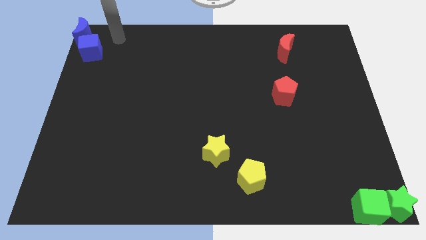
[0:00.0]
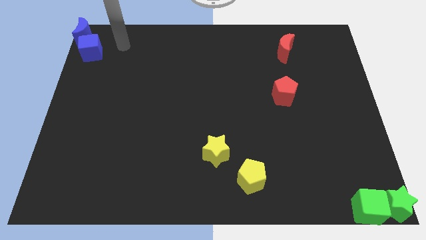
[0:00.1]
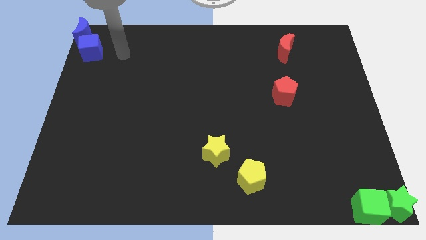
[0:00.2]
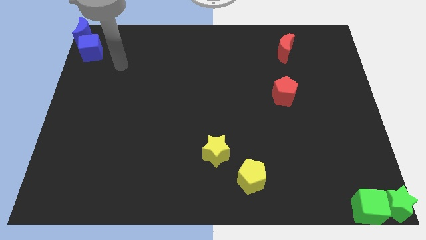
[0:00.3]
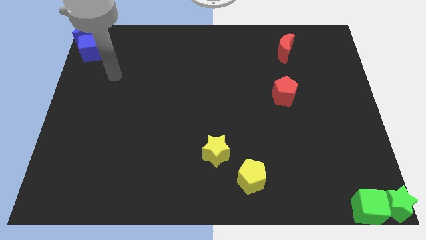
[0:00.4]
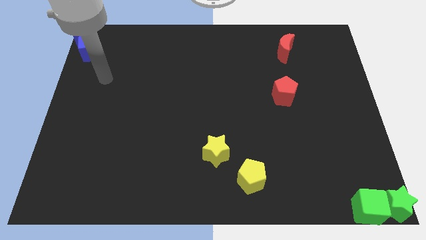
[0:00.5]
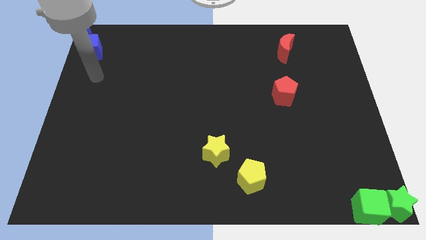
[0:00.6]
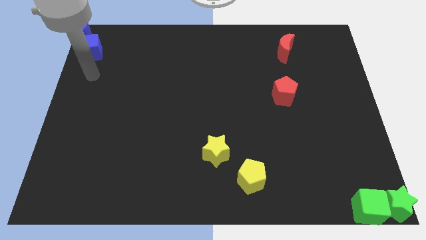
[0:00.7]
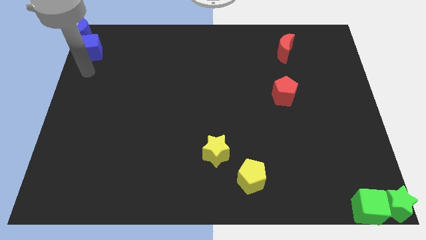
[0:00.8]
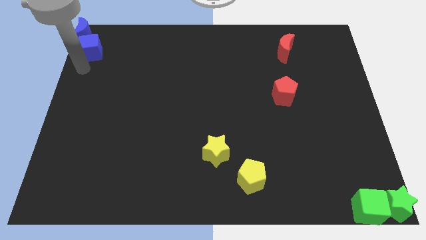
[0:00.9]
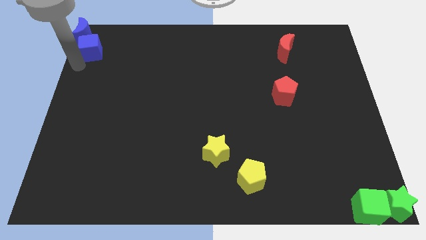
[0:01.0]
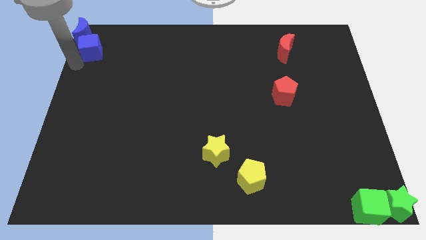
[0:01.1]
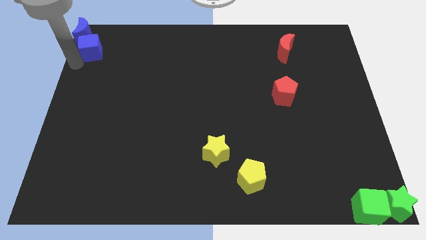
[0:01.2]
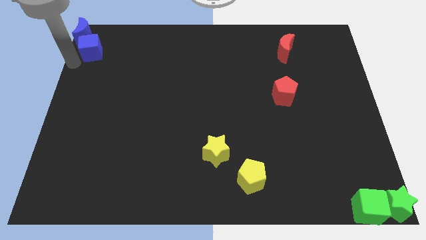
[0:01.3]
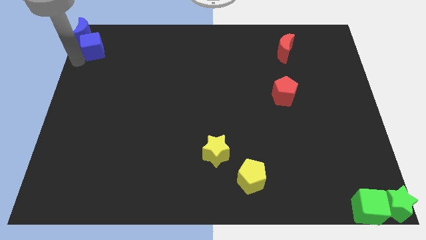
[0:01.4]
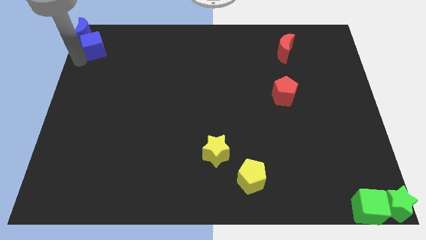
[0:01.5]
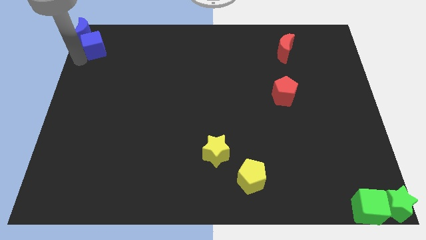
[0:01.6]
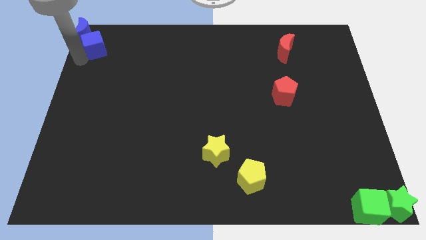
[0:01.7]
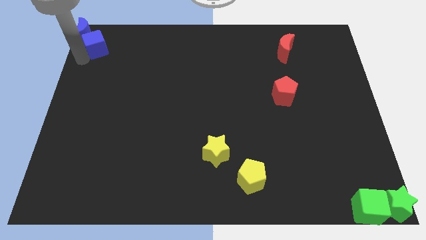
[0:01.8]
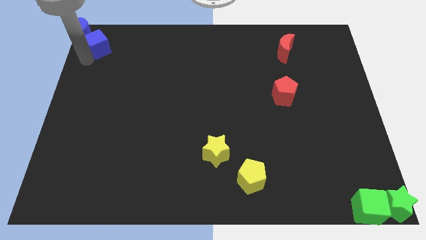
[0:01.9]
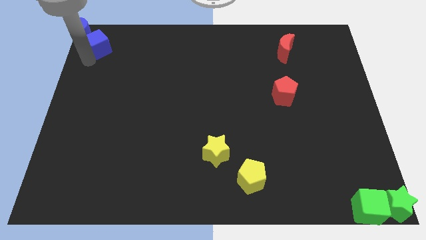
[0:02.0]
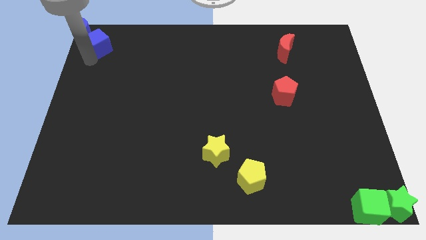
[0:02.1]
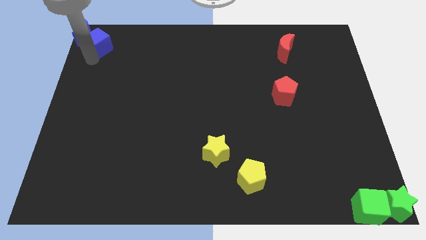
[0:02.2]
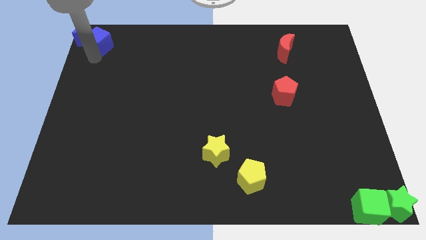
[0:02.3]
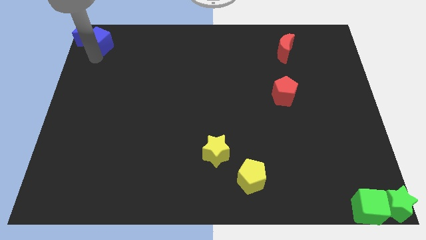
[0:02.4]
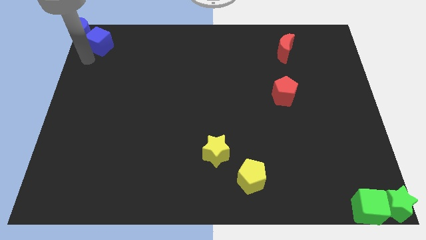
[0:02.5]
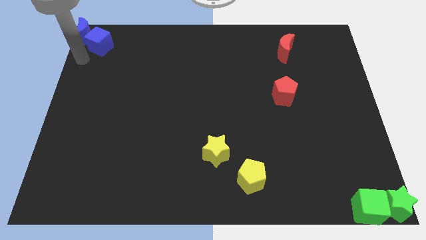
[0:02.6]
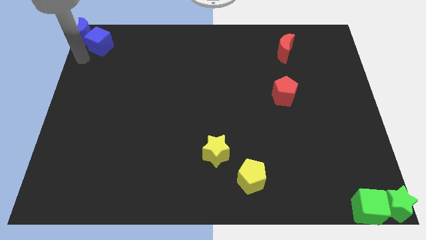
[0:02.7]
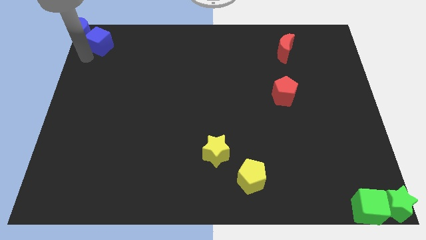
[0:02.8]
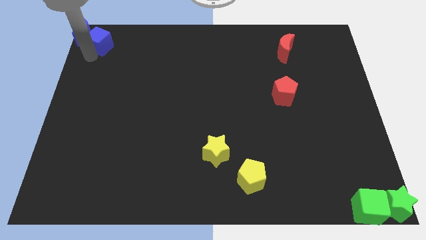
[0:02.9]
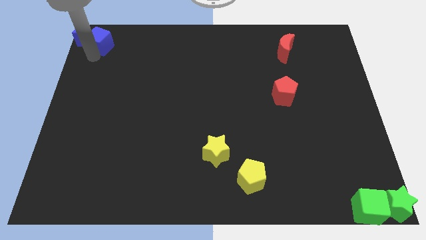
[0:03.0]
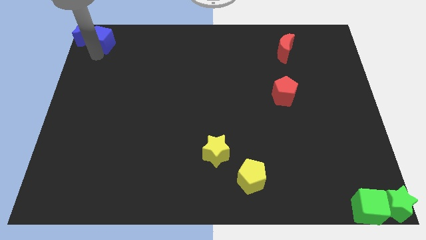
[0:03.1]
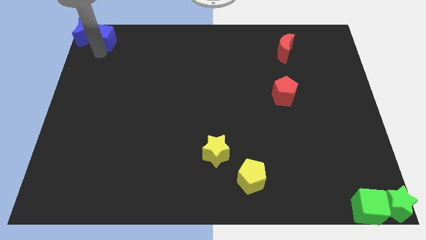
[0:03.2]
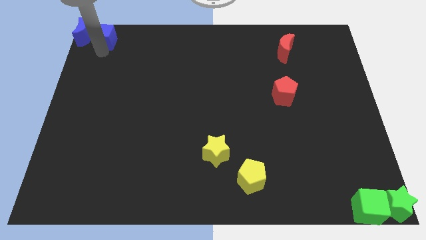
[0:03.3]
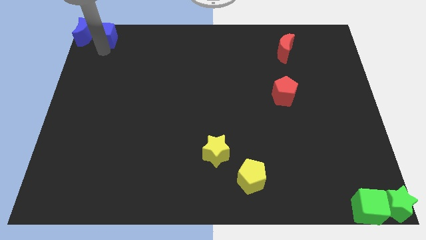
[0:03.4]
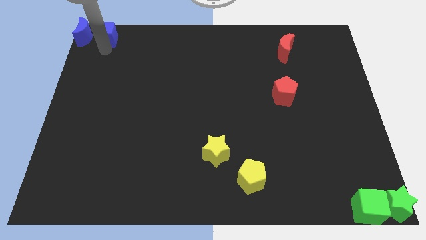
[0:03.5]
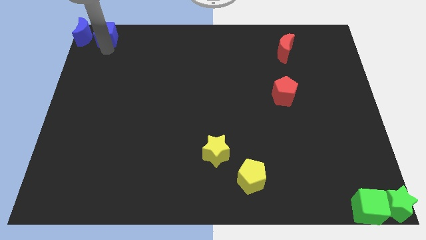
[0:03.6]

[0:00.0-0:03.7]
push the blue cube to the right of the blue crescent

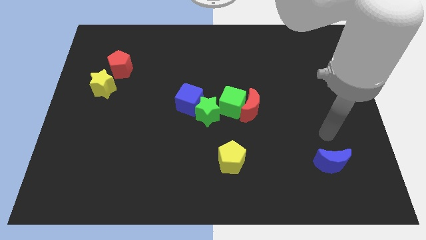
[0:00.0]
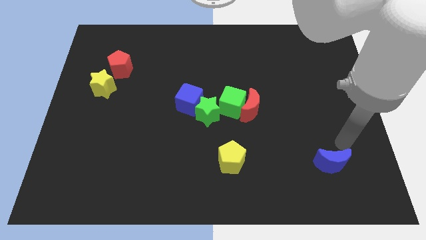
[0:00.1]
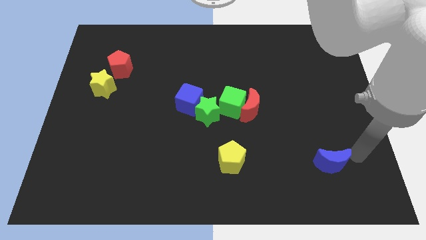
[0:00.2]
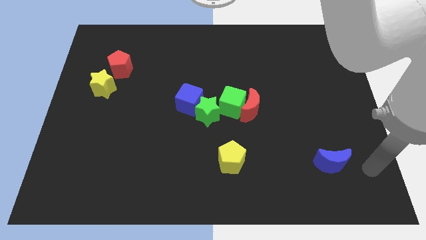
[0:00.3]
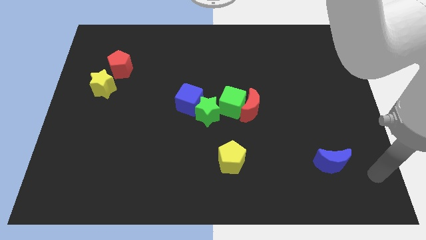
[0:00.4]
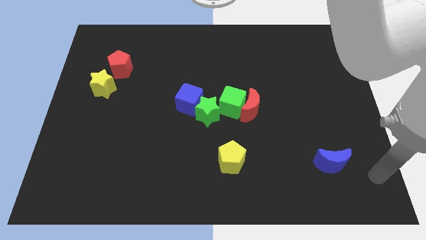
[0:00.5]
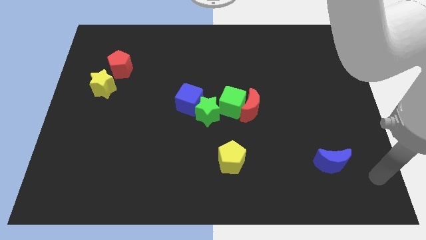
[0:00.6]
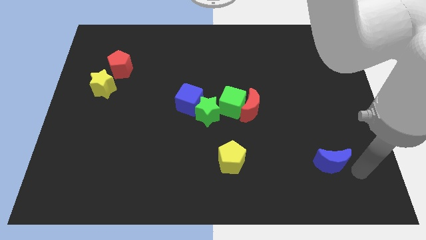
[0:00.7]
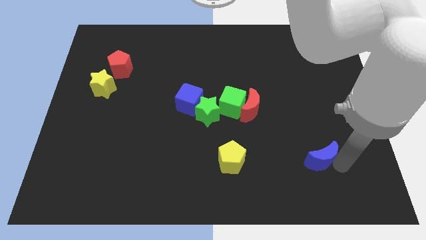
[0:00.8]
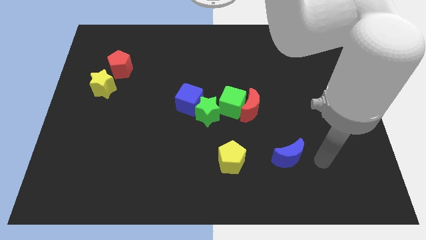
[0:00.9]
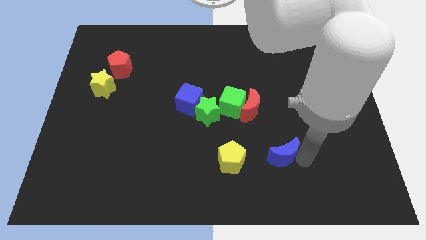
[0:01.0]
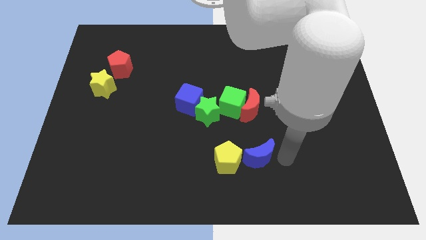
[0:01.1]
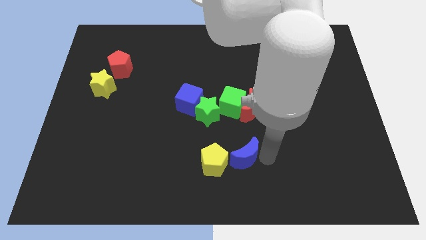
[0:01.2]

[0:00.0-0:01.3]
move the blue moon into the yellow pentagon

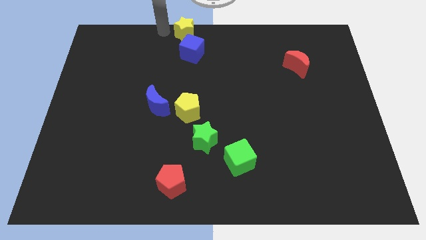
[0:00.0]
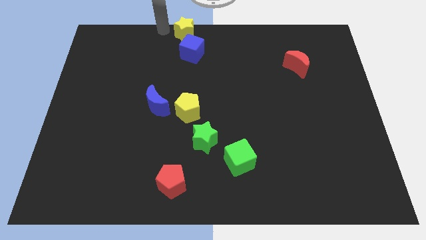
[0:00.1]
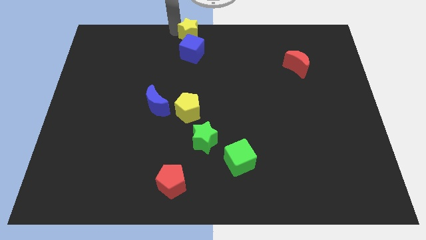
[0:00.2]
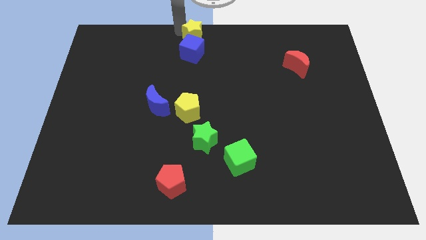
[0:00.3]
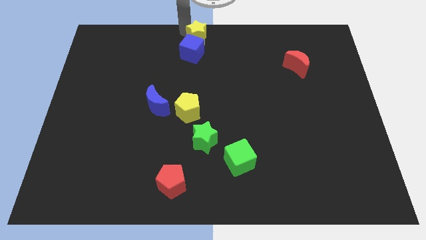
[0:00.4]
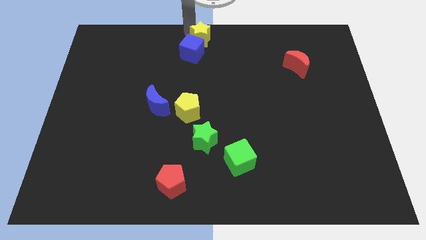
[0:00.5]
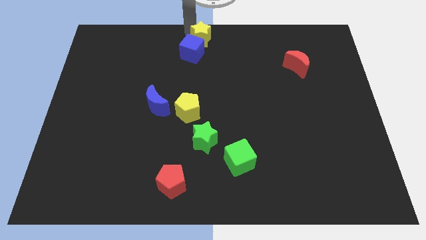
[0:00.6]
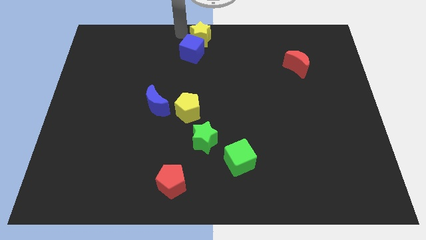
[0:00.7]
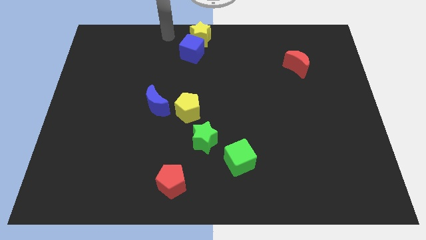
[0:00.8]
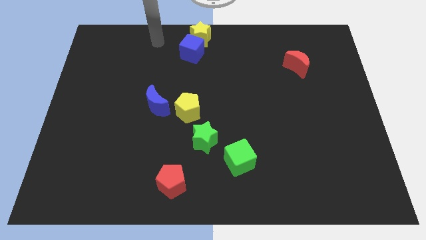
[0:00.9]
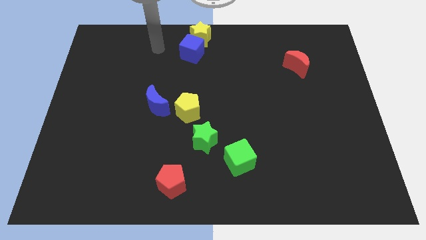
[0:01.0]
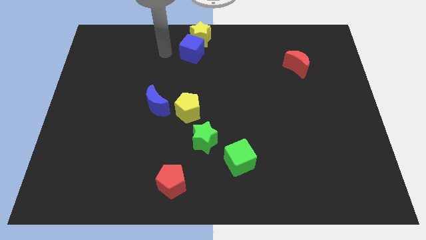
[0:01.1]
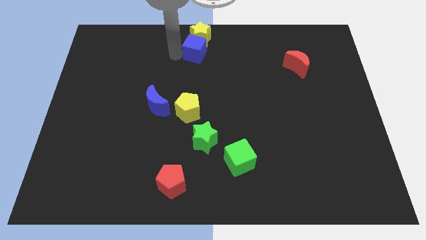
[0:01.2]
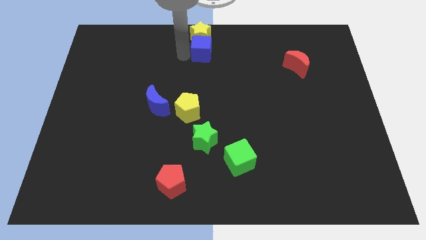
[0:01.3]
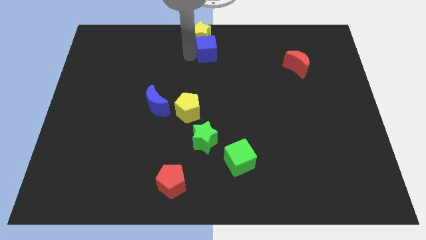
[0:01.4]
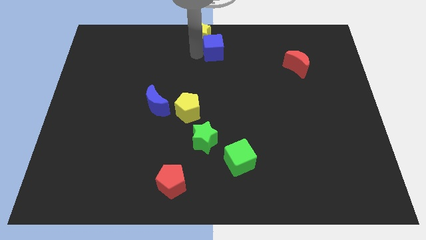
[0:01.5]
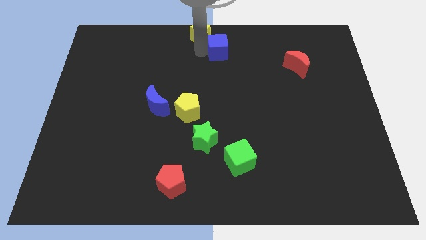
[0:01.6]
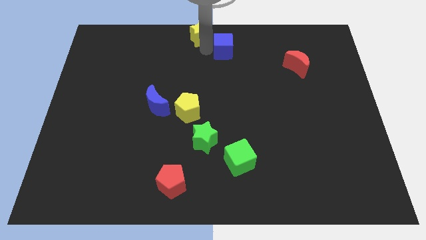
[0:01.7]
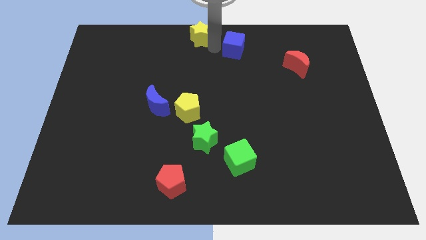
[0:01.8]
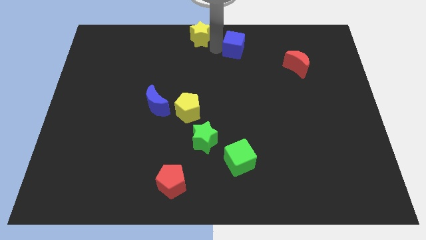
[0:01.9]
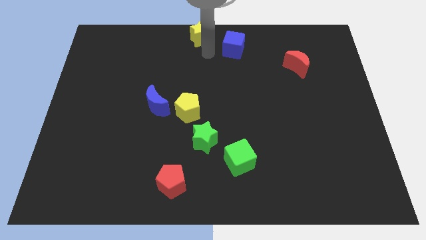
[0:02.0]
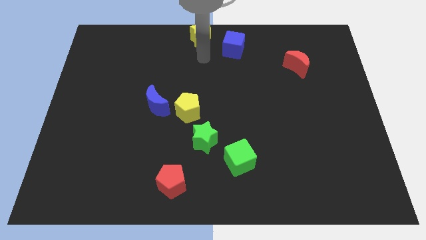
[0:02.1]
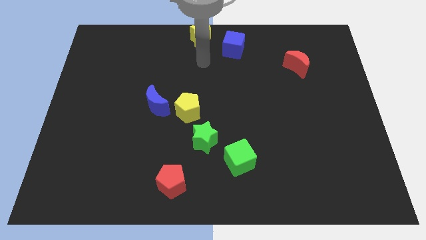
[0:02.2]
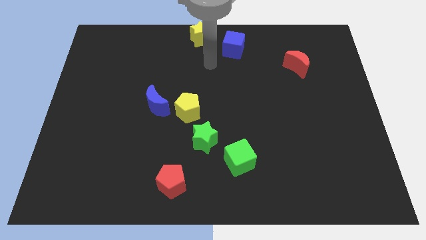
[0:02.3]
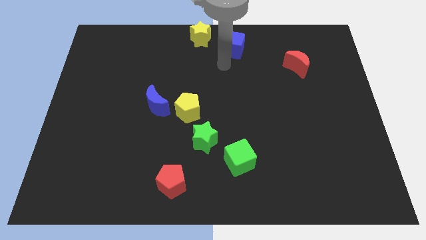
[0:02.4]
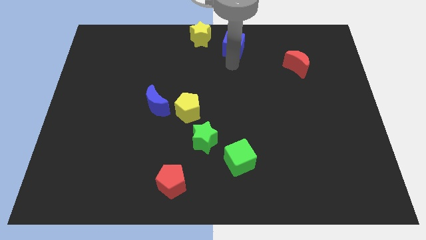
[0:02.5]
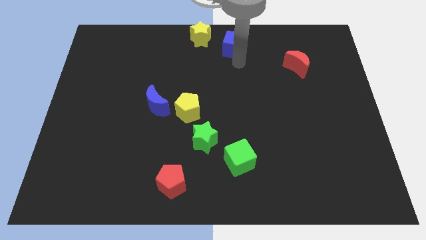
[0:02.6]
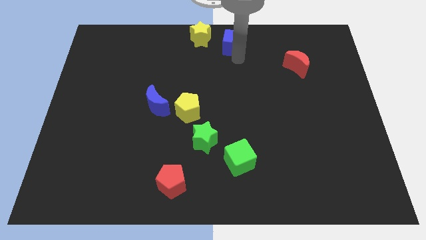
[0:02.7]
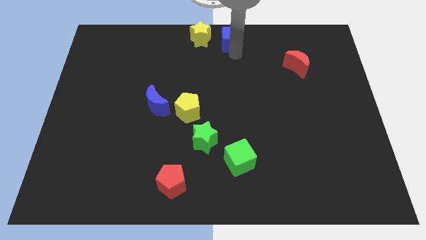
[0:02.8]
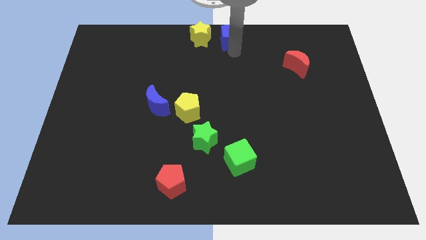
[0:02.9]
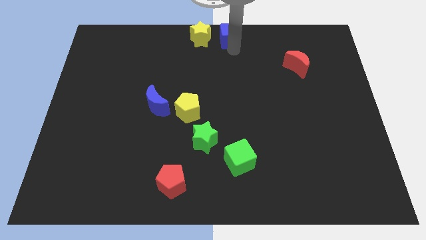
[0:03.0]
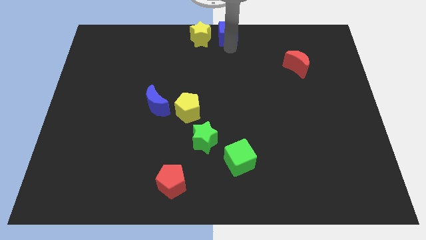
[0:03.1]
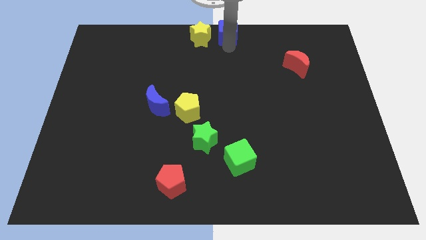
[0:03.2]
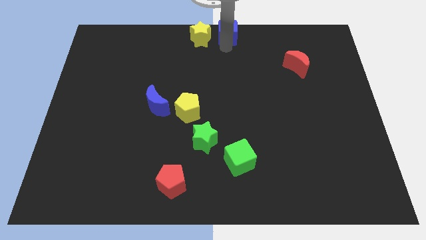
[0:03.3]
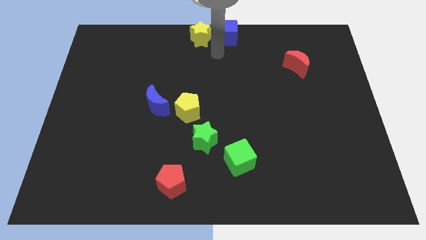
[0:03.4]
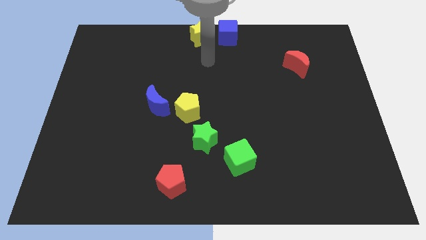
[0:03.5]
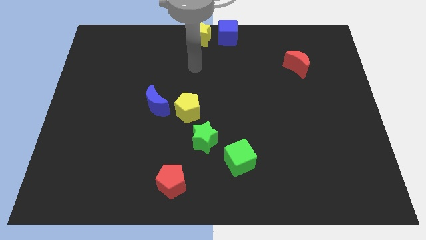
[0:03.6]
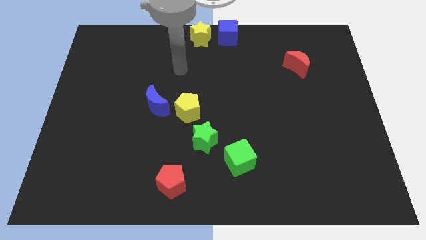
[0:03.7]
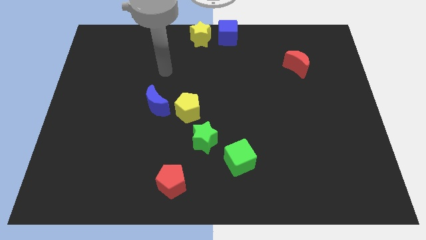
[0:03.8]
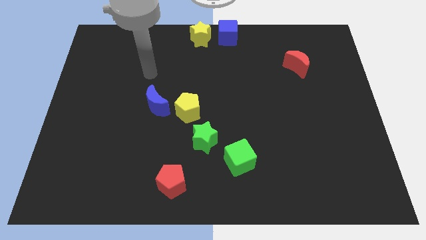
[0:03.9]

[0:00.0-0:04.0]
place the blue cube to the right of the yellow star
